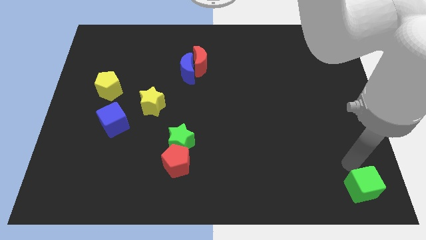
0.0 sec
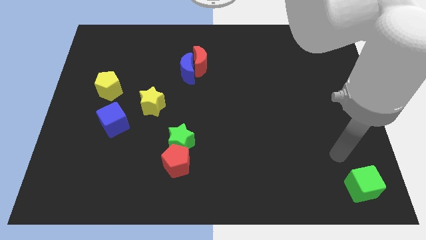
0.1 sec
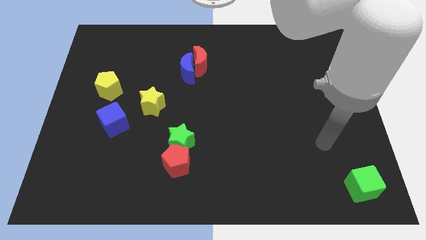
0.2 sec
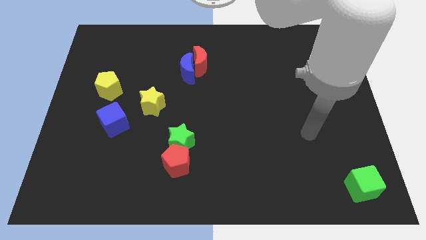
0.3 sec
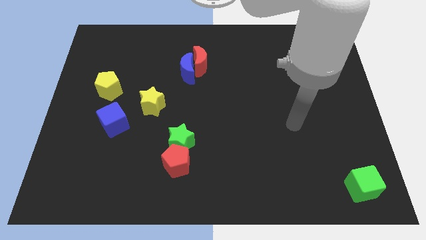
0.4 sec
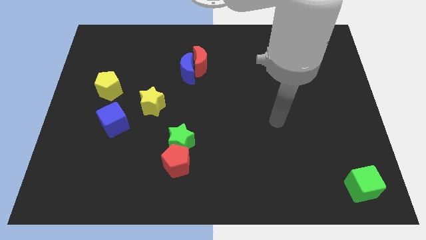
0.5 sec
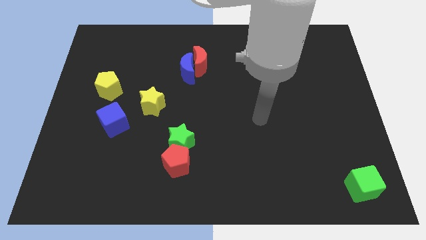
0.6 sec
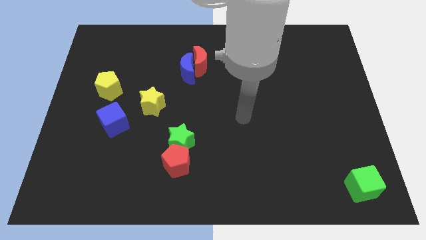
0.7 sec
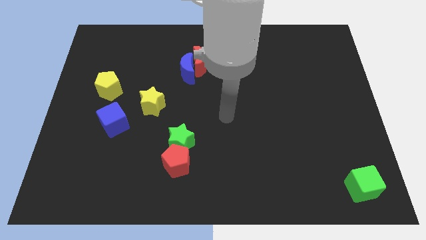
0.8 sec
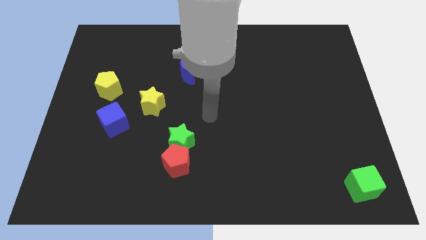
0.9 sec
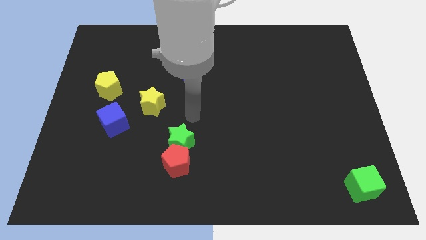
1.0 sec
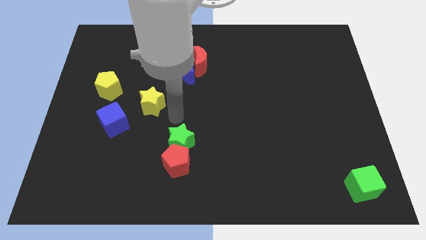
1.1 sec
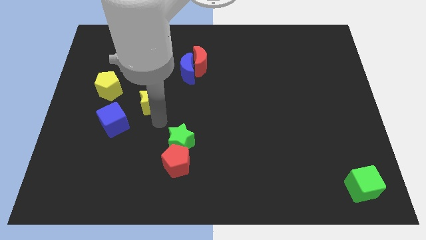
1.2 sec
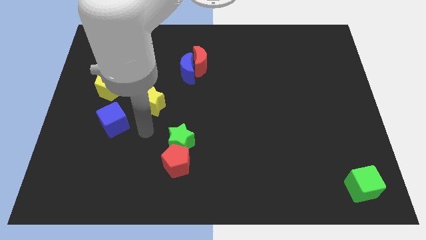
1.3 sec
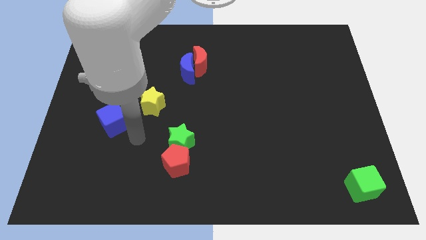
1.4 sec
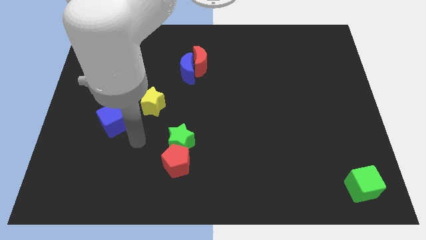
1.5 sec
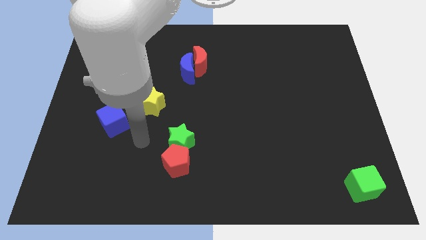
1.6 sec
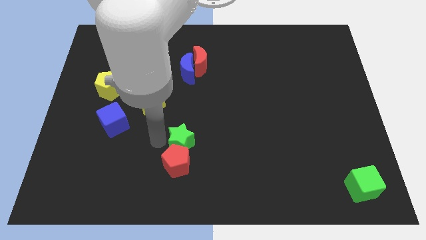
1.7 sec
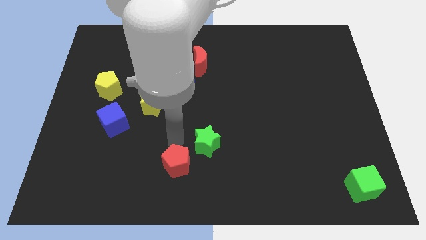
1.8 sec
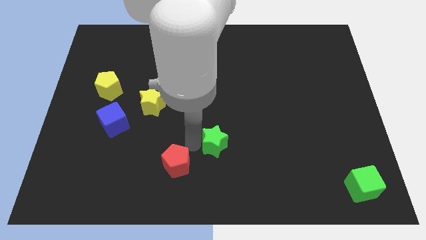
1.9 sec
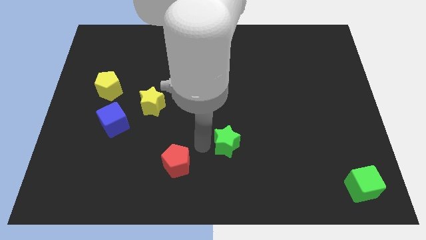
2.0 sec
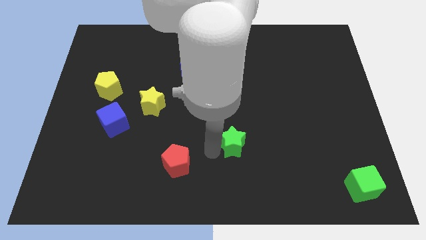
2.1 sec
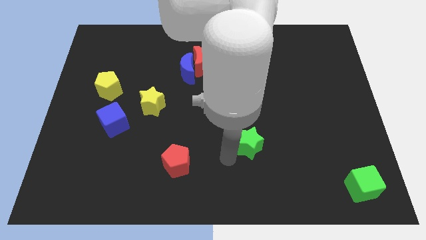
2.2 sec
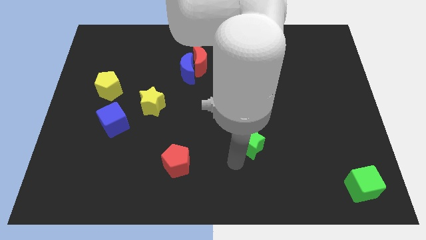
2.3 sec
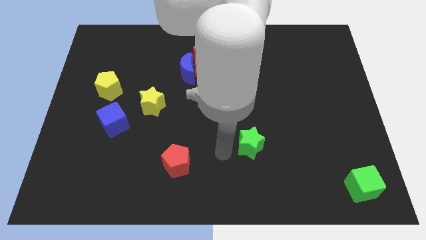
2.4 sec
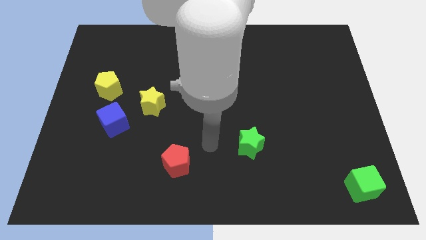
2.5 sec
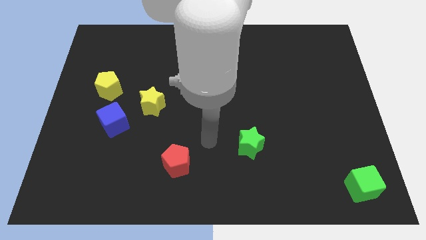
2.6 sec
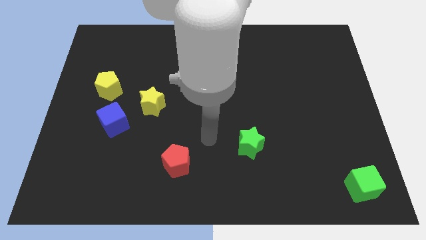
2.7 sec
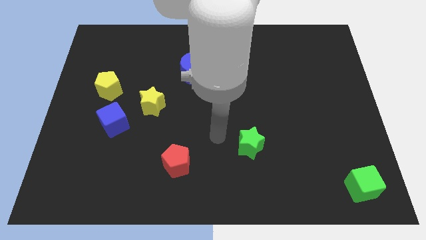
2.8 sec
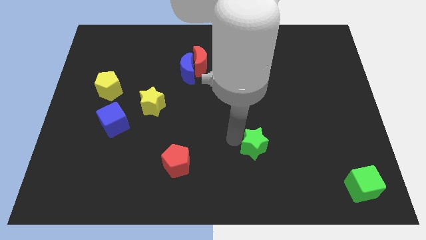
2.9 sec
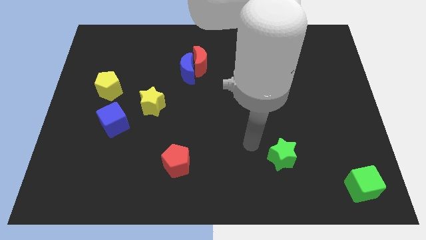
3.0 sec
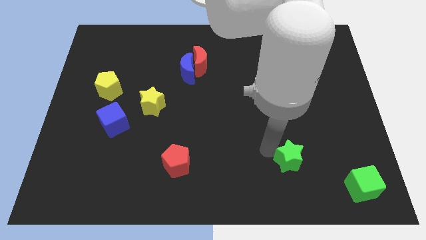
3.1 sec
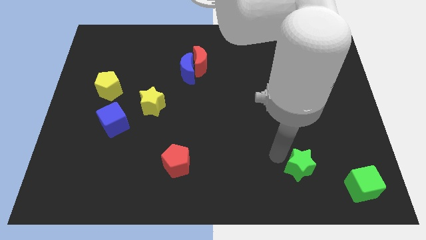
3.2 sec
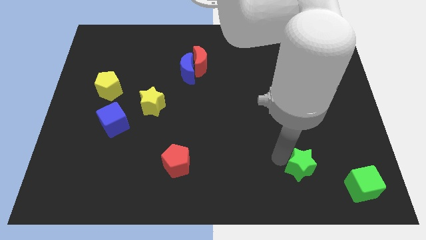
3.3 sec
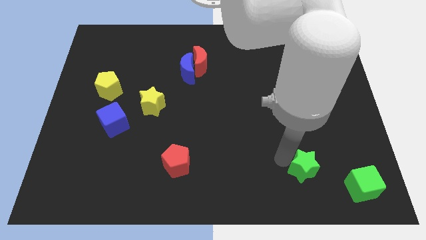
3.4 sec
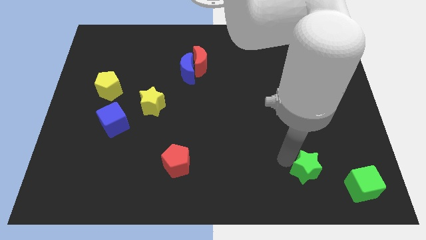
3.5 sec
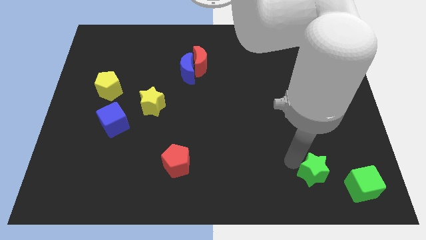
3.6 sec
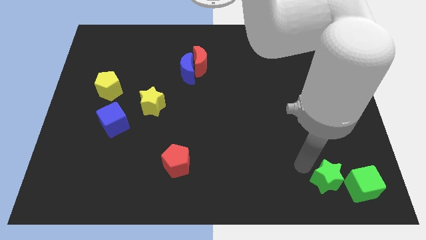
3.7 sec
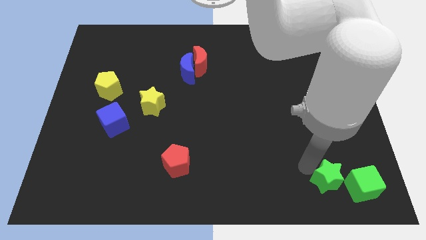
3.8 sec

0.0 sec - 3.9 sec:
separate the green star from the red pentagon

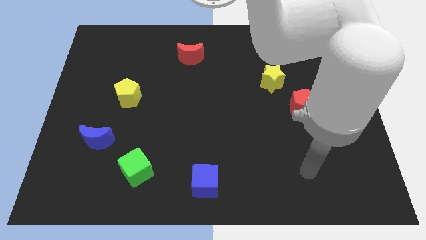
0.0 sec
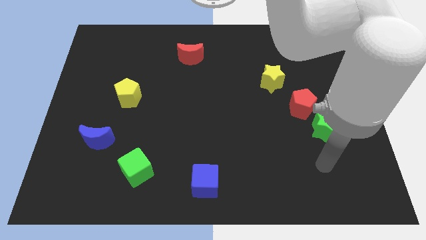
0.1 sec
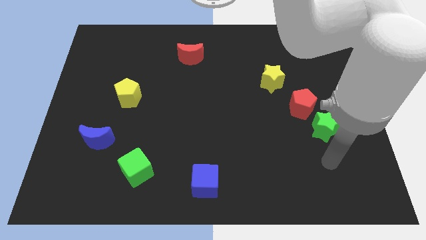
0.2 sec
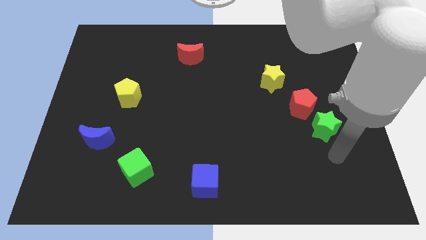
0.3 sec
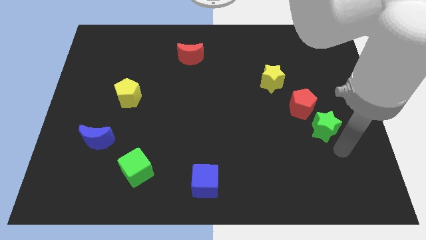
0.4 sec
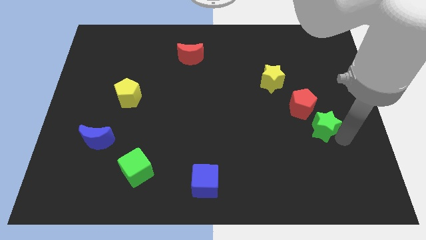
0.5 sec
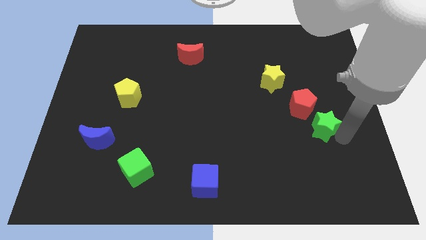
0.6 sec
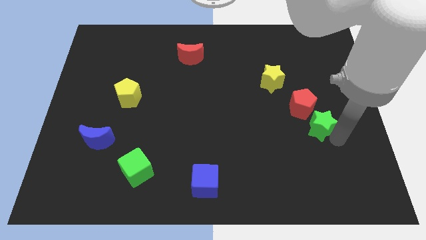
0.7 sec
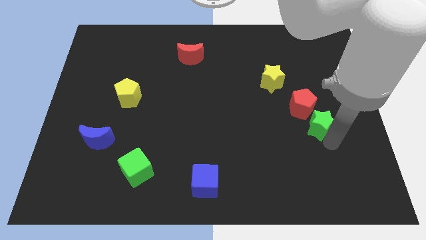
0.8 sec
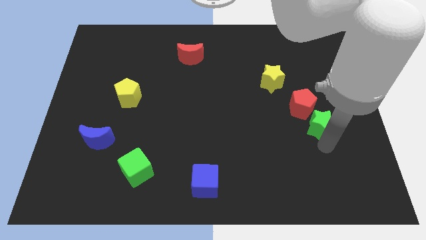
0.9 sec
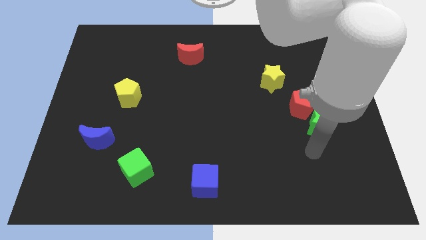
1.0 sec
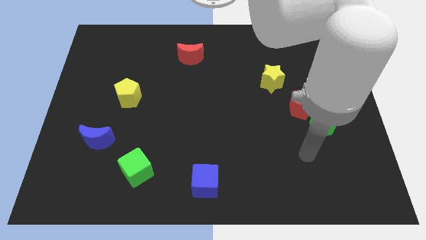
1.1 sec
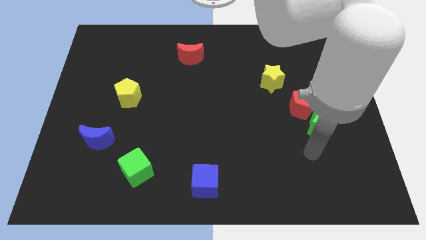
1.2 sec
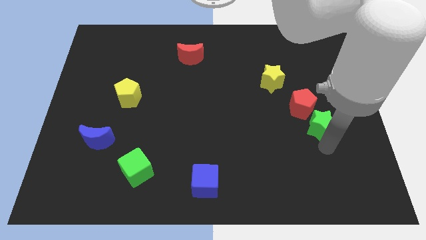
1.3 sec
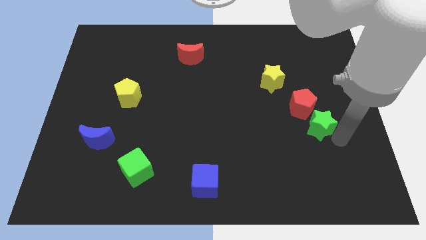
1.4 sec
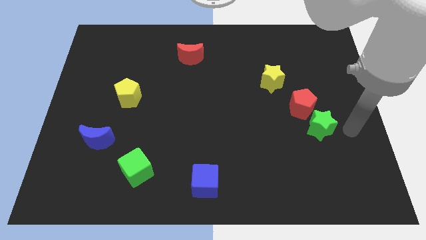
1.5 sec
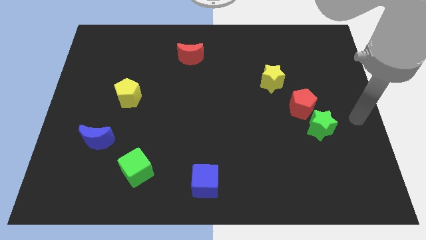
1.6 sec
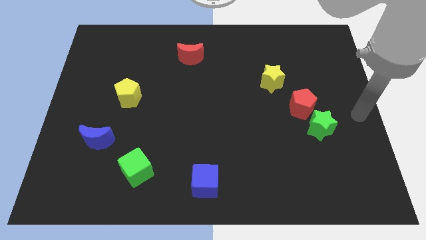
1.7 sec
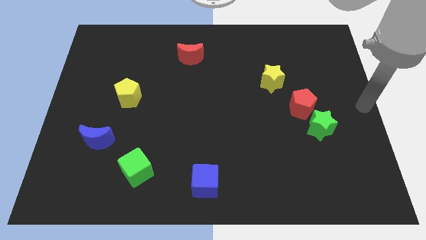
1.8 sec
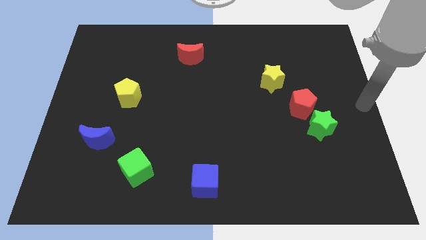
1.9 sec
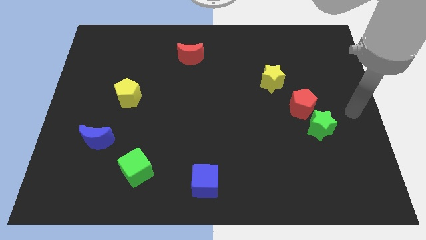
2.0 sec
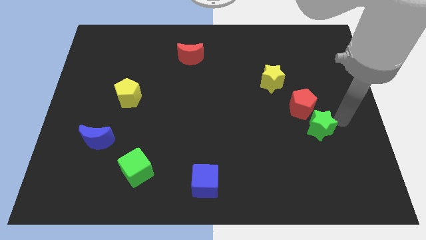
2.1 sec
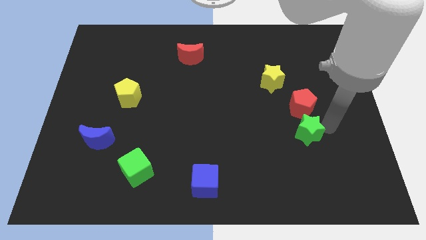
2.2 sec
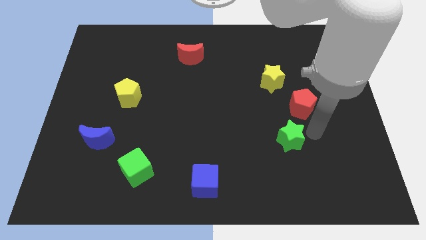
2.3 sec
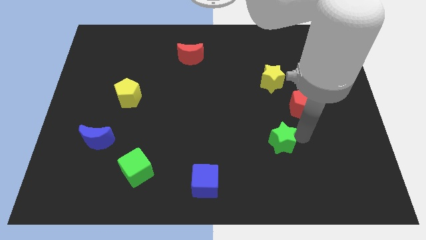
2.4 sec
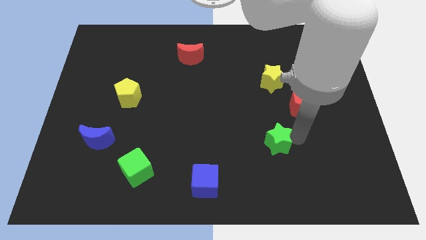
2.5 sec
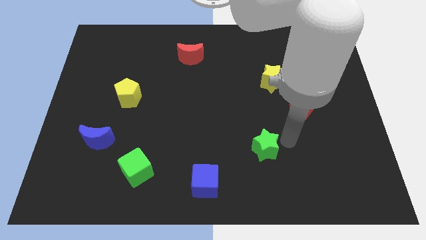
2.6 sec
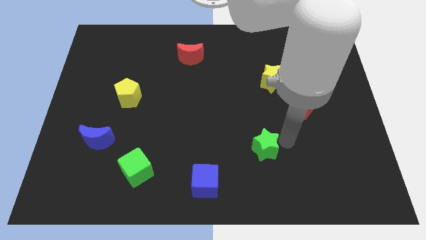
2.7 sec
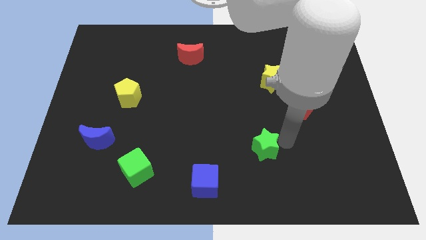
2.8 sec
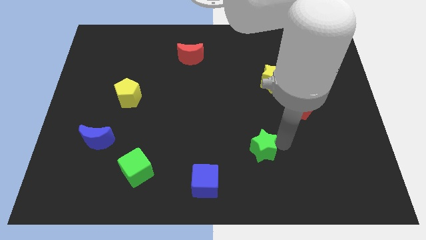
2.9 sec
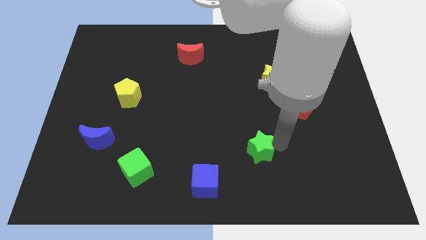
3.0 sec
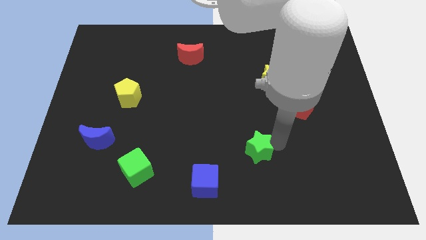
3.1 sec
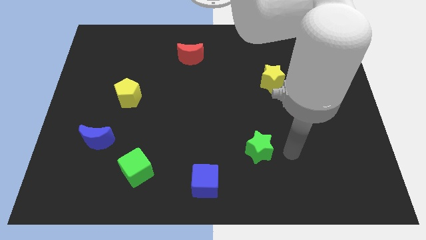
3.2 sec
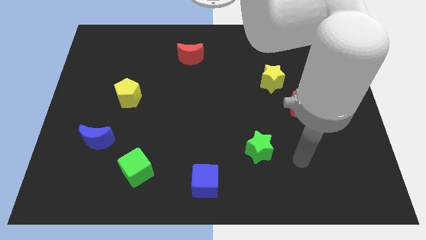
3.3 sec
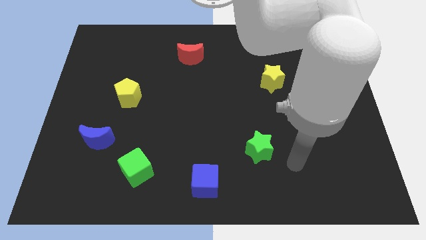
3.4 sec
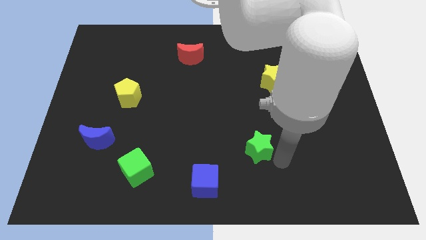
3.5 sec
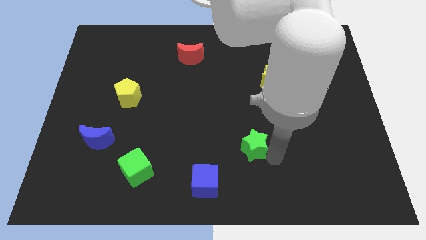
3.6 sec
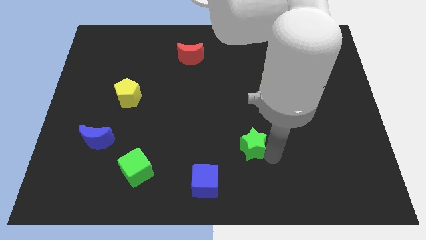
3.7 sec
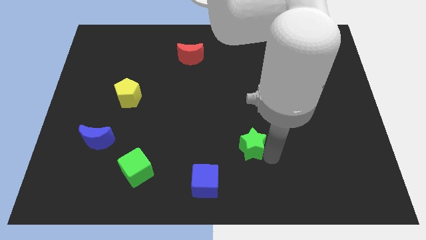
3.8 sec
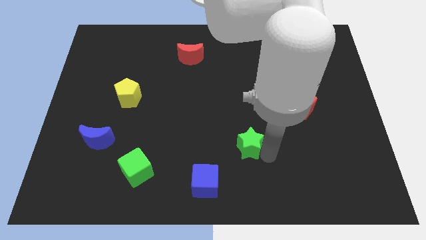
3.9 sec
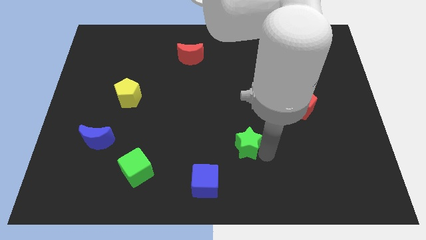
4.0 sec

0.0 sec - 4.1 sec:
move the green star to the left of the board

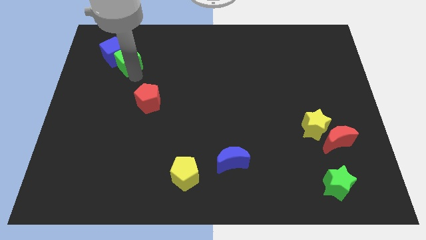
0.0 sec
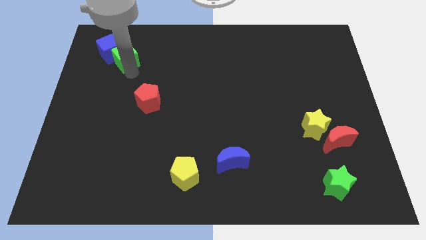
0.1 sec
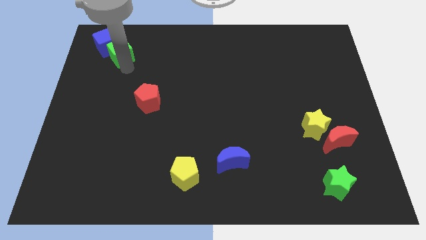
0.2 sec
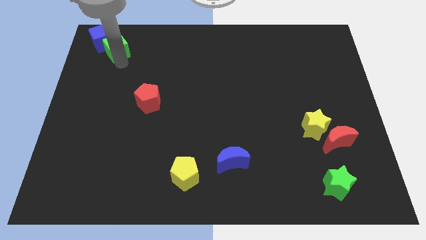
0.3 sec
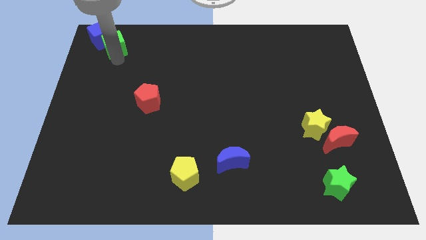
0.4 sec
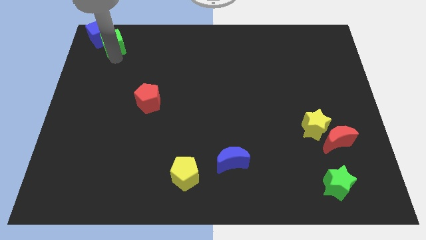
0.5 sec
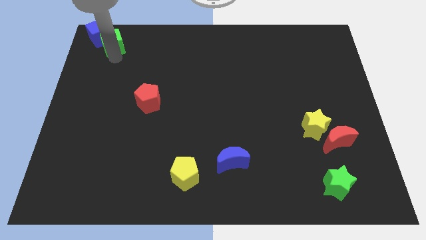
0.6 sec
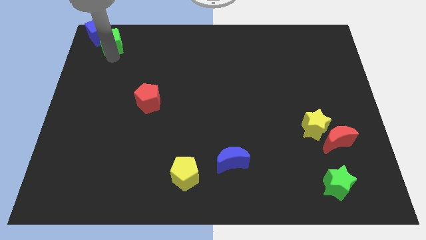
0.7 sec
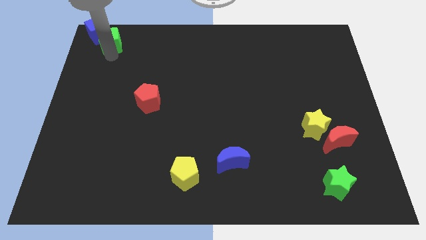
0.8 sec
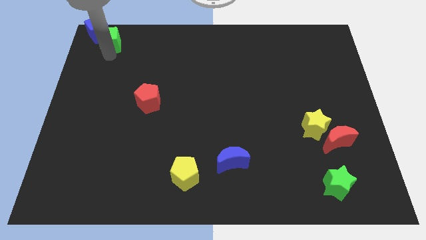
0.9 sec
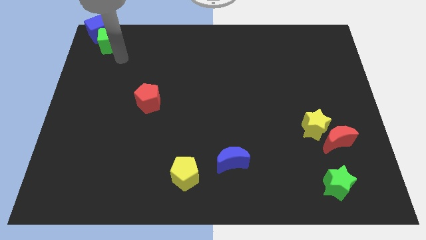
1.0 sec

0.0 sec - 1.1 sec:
push the green cube and blue cube to the top left corner of the board
